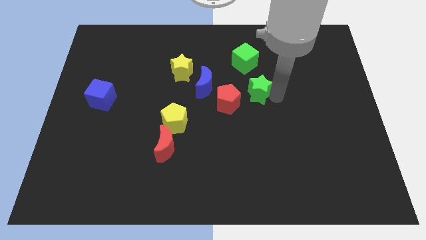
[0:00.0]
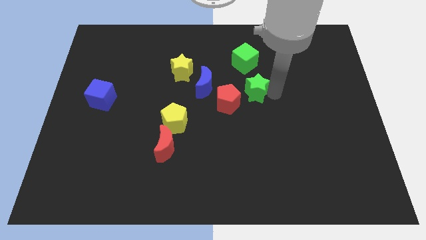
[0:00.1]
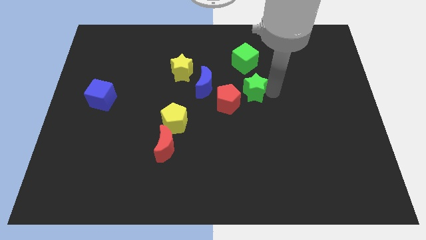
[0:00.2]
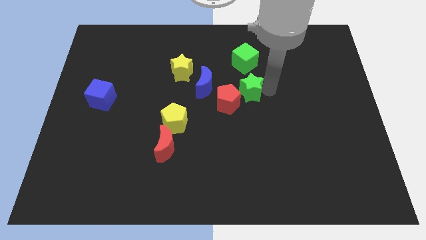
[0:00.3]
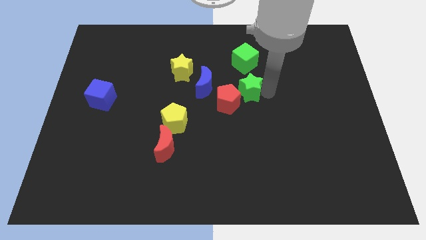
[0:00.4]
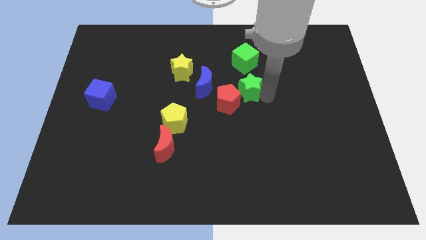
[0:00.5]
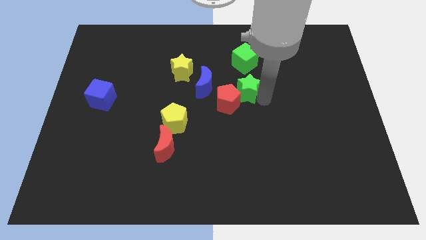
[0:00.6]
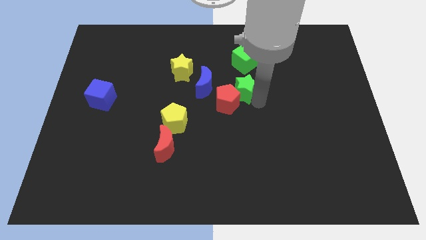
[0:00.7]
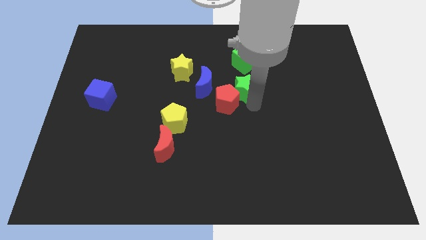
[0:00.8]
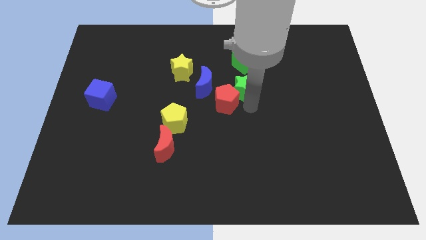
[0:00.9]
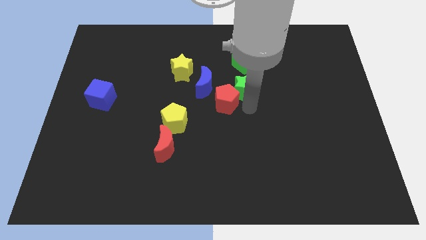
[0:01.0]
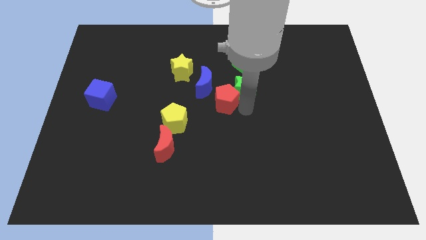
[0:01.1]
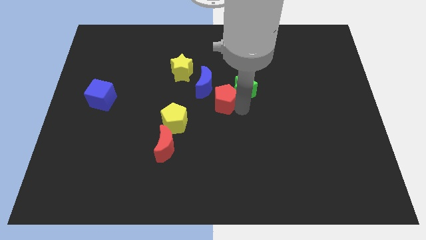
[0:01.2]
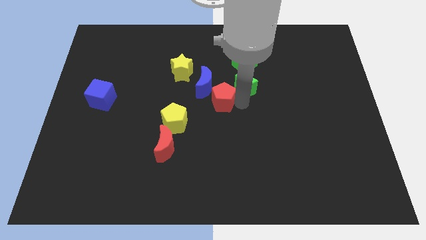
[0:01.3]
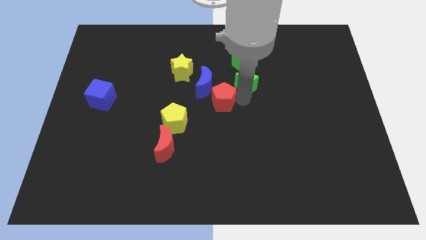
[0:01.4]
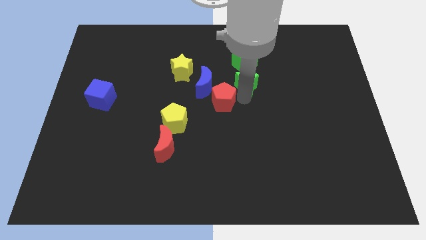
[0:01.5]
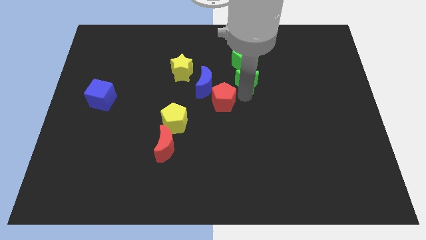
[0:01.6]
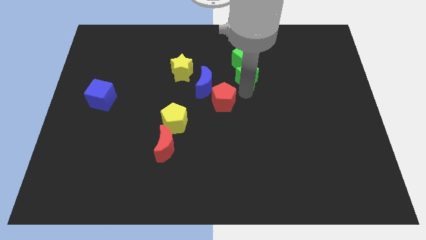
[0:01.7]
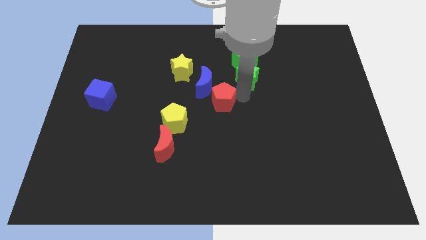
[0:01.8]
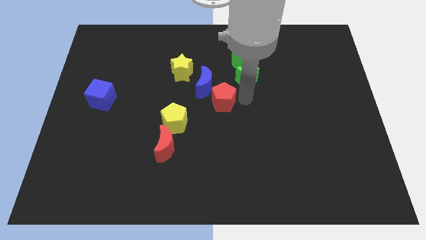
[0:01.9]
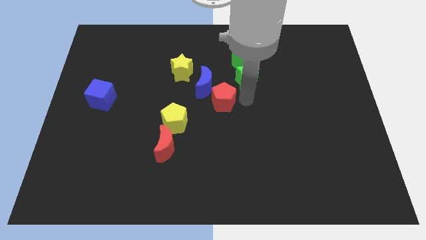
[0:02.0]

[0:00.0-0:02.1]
move the green star to the bottom of the green cube

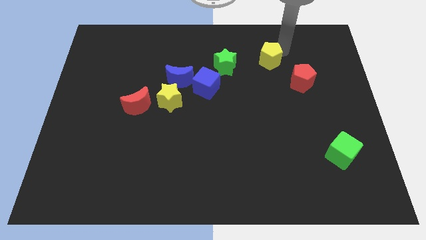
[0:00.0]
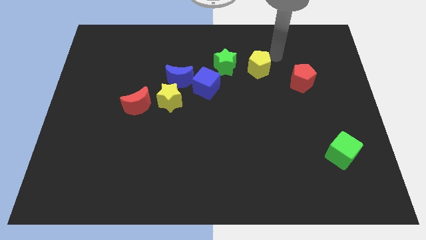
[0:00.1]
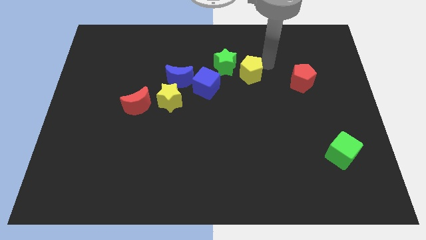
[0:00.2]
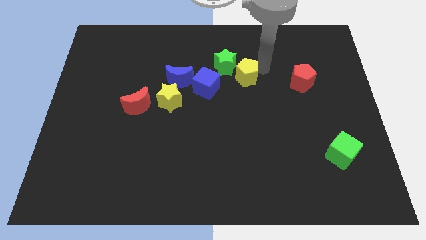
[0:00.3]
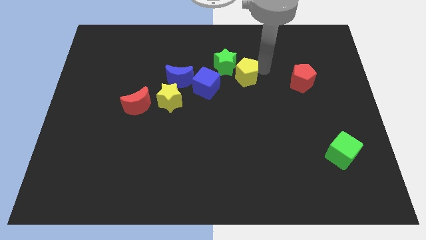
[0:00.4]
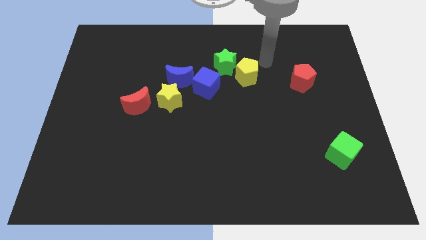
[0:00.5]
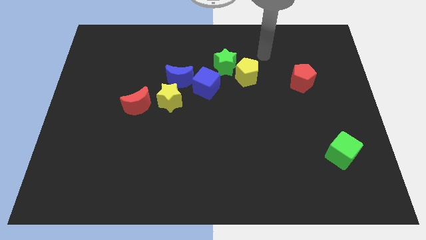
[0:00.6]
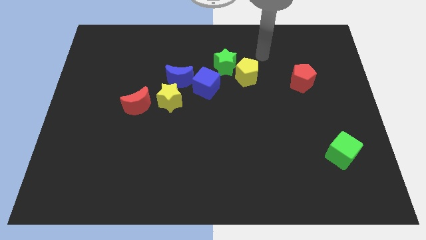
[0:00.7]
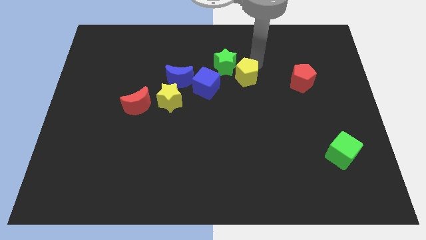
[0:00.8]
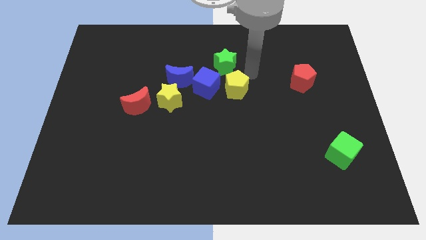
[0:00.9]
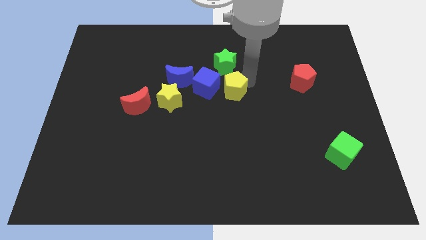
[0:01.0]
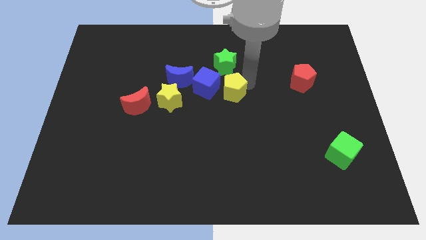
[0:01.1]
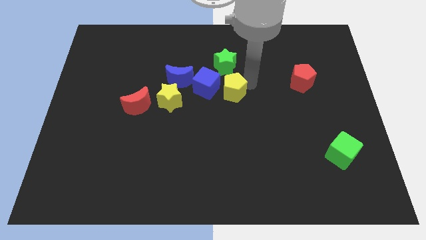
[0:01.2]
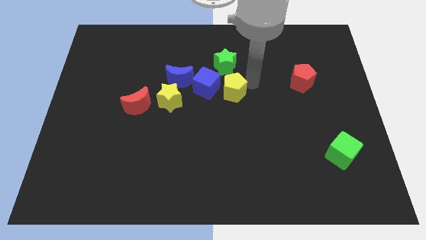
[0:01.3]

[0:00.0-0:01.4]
move the yellow pentagon right to the blue cube

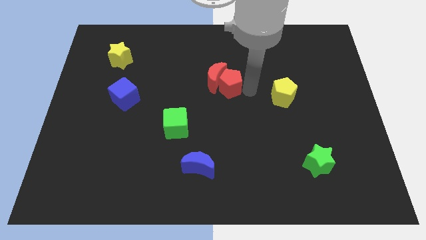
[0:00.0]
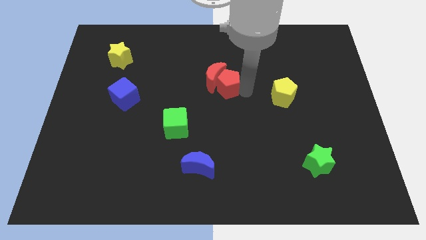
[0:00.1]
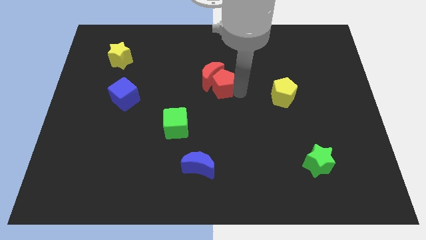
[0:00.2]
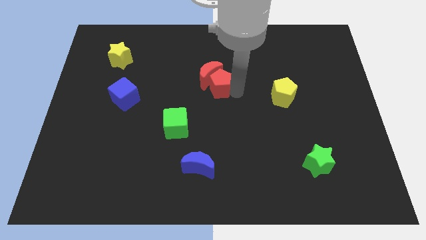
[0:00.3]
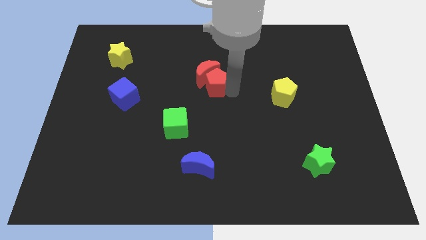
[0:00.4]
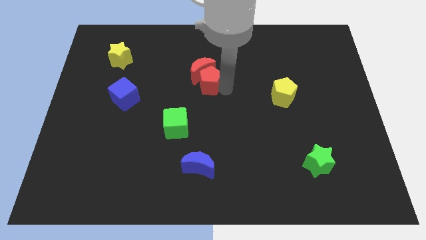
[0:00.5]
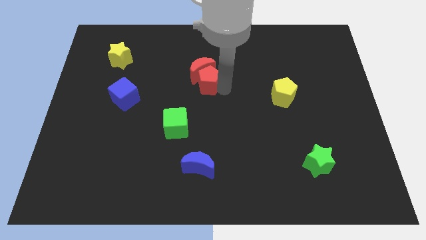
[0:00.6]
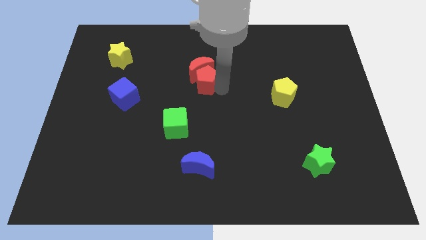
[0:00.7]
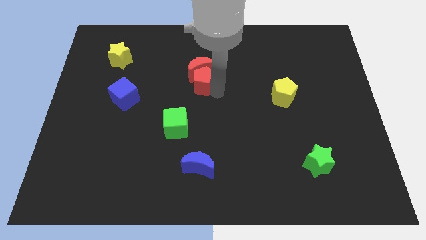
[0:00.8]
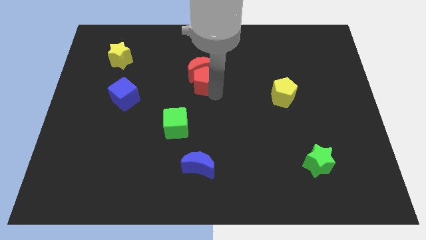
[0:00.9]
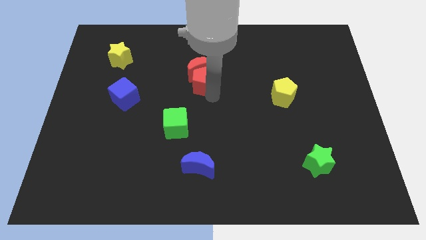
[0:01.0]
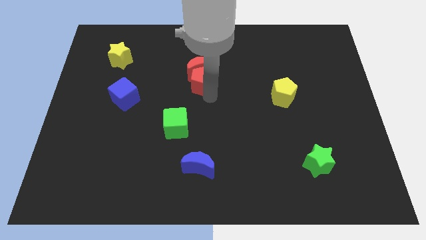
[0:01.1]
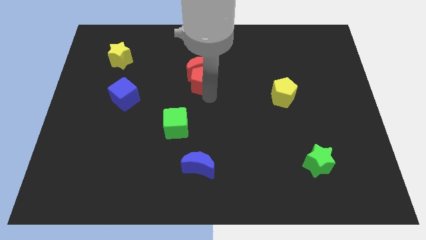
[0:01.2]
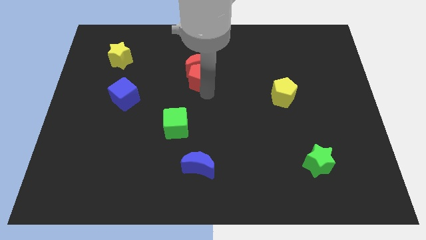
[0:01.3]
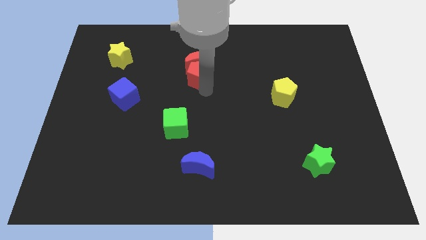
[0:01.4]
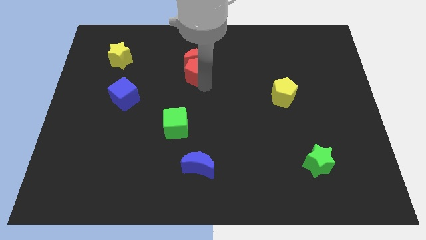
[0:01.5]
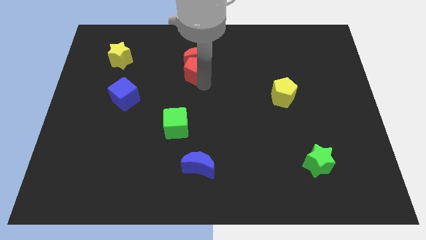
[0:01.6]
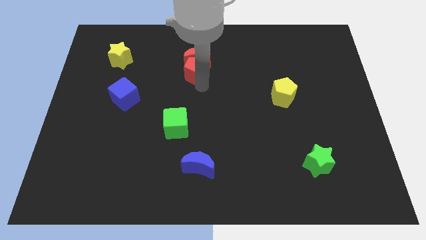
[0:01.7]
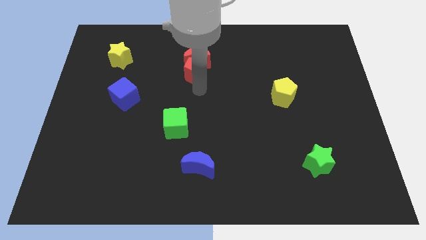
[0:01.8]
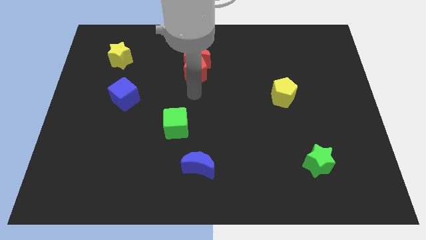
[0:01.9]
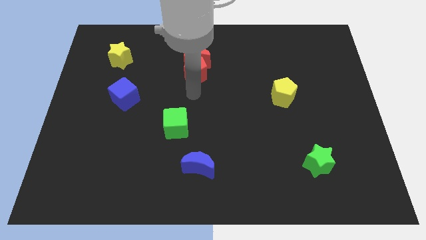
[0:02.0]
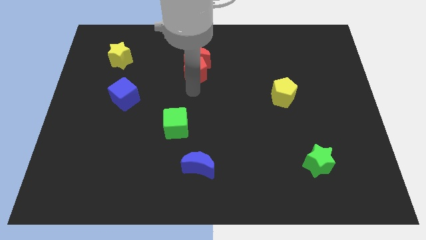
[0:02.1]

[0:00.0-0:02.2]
move red crescent with red pentagon

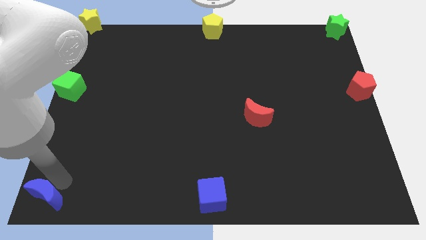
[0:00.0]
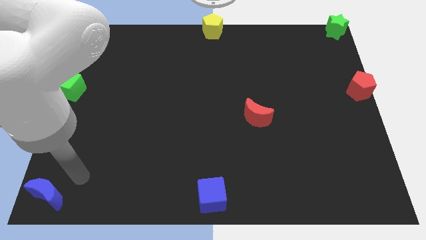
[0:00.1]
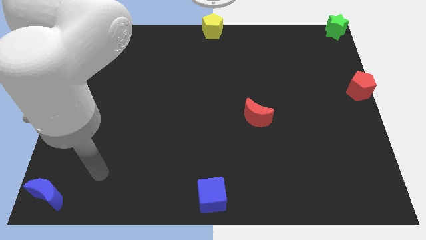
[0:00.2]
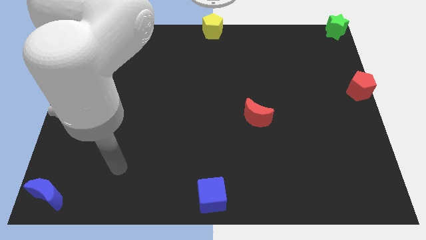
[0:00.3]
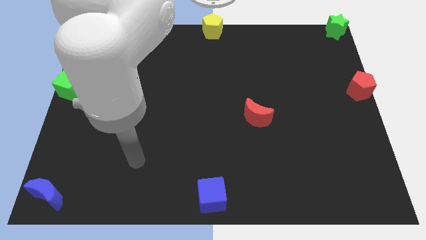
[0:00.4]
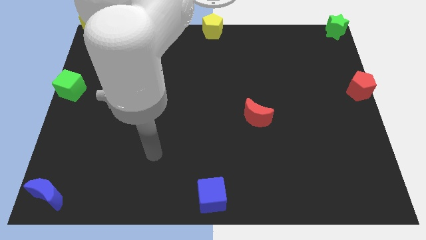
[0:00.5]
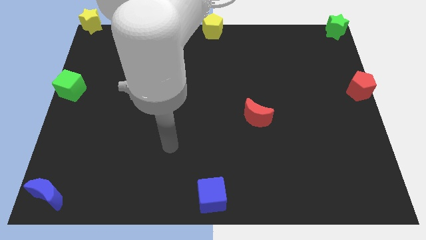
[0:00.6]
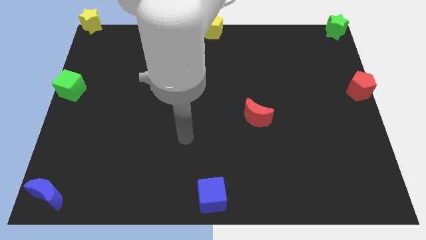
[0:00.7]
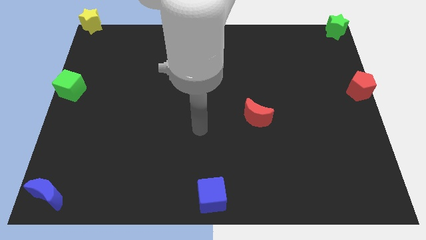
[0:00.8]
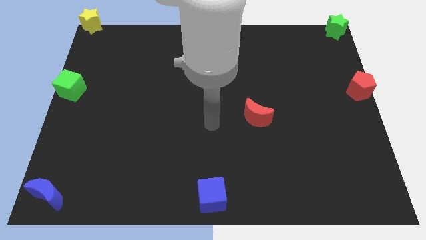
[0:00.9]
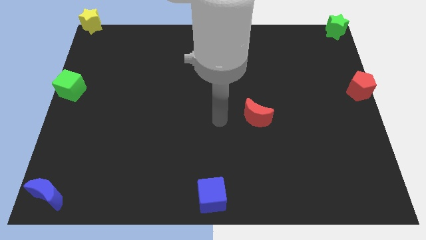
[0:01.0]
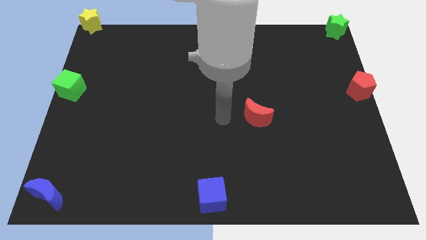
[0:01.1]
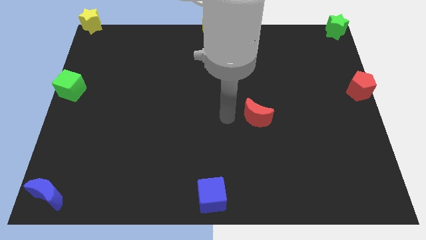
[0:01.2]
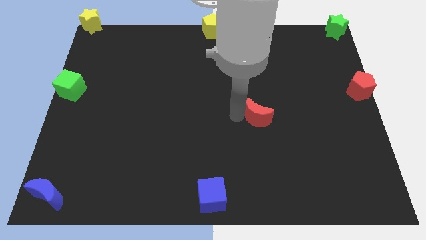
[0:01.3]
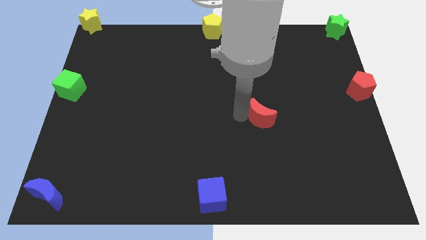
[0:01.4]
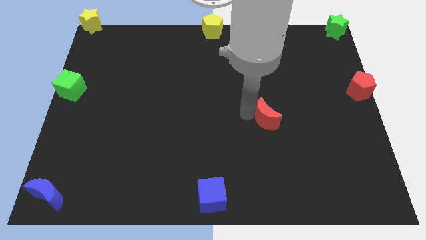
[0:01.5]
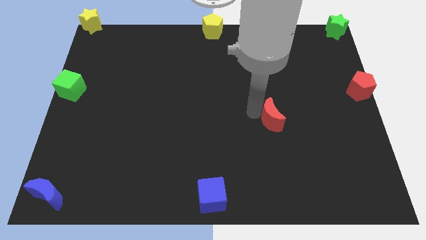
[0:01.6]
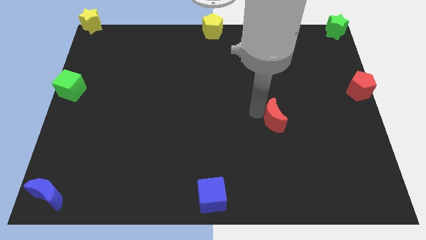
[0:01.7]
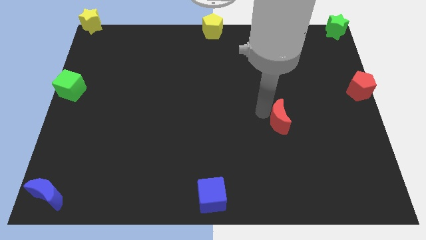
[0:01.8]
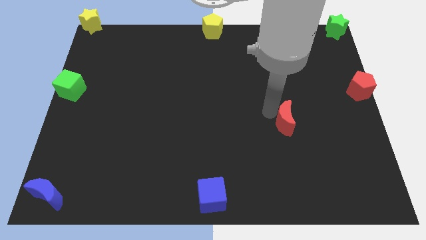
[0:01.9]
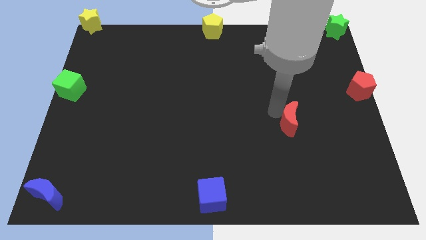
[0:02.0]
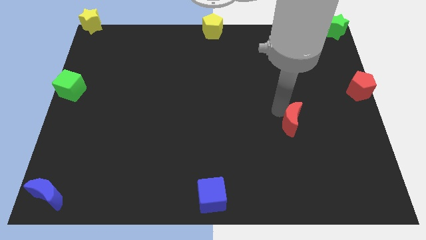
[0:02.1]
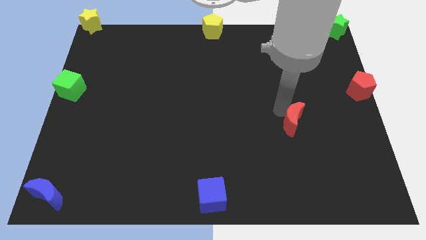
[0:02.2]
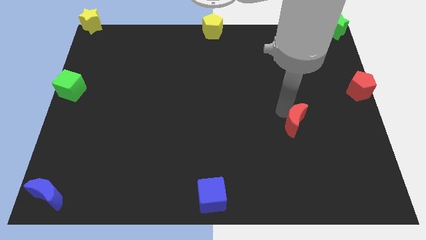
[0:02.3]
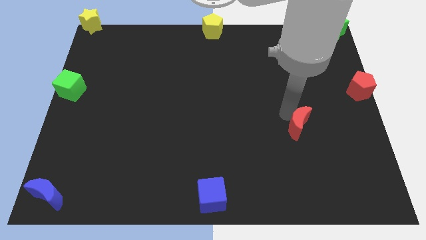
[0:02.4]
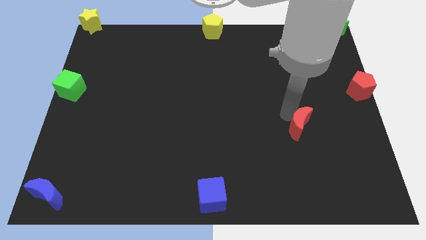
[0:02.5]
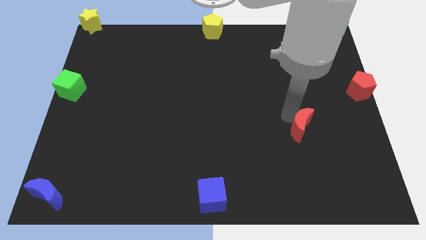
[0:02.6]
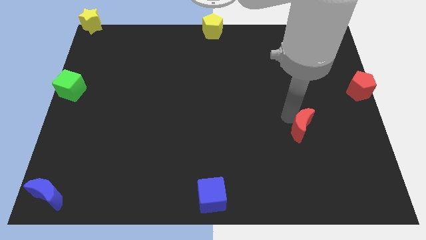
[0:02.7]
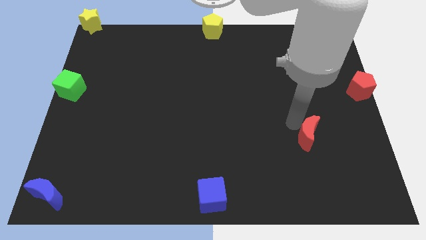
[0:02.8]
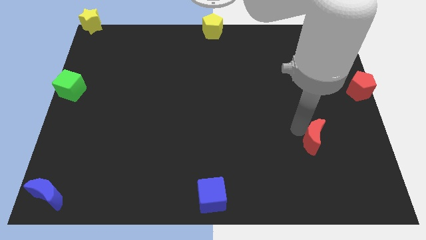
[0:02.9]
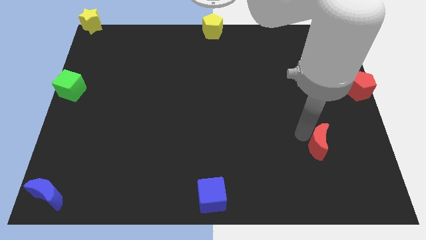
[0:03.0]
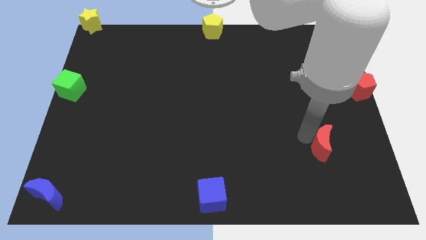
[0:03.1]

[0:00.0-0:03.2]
move the arm away from the blue moon

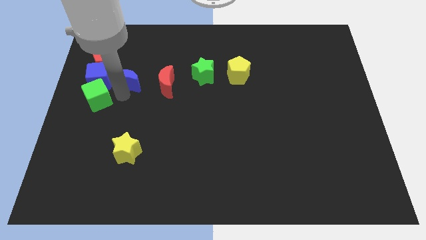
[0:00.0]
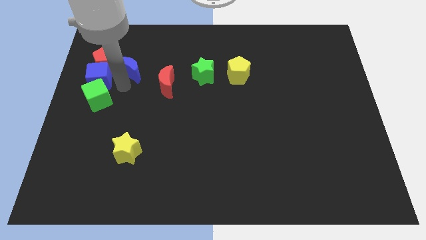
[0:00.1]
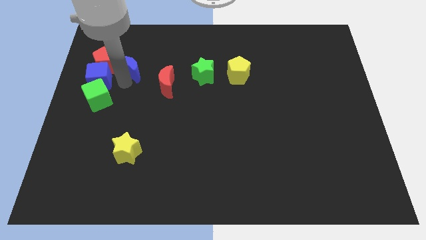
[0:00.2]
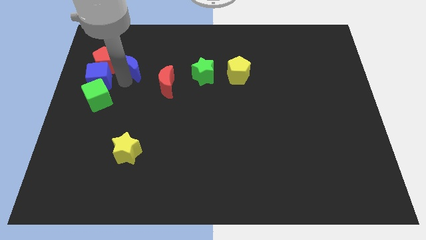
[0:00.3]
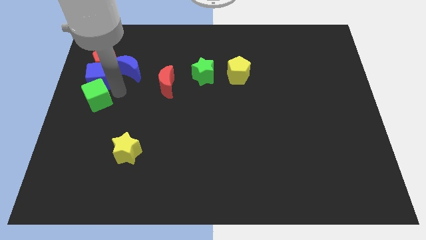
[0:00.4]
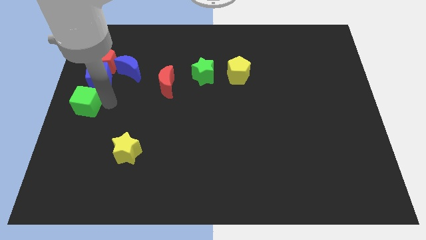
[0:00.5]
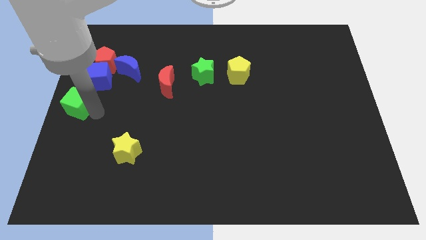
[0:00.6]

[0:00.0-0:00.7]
place blue crescent near to red pentagon
